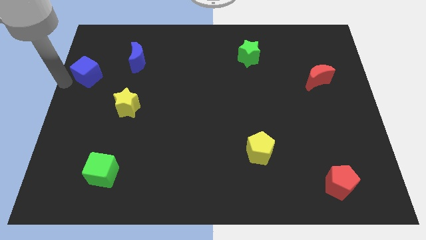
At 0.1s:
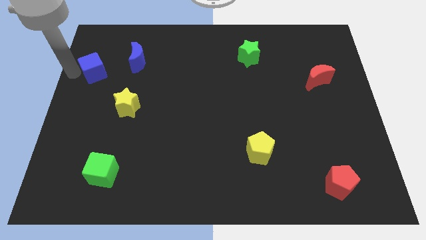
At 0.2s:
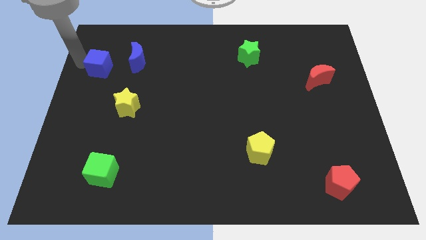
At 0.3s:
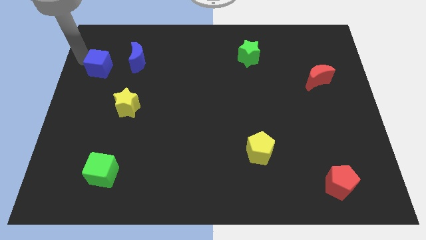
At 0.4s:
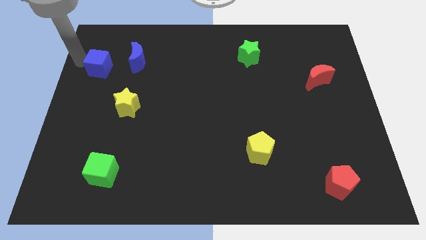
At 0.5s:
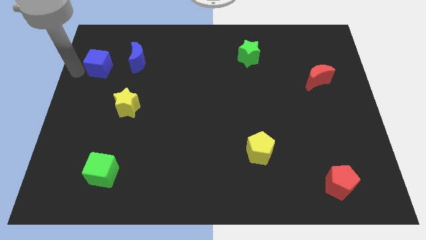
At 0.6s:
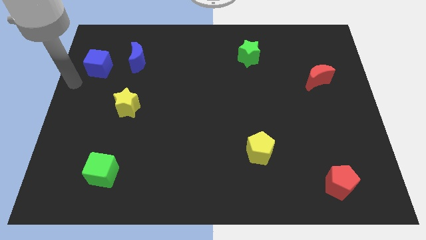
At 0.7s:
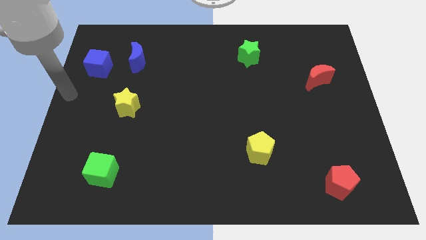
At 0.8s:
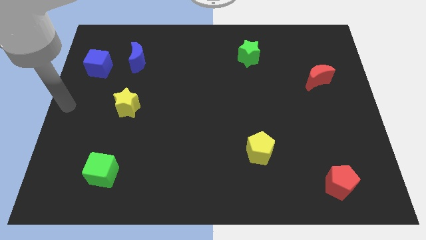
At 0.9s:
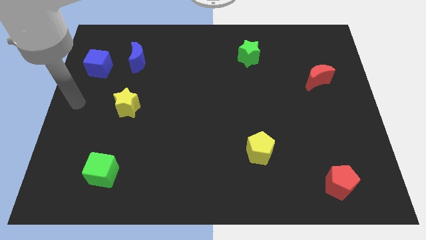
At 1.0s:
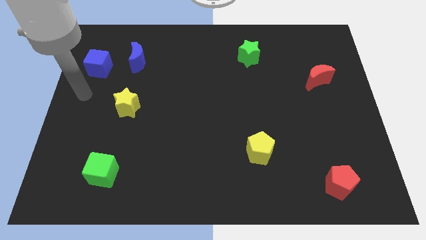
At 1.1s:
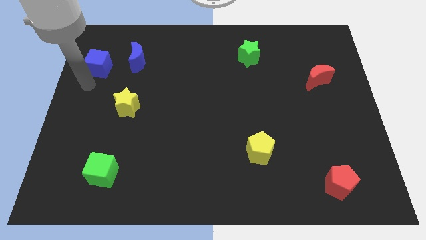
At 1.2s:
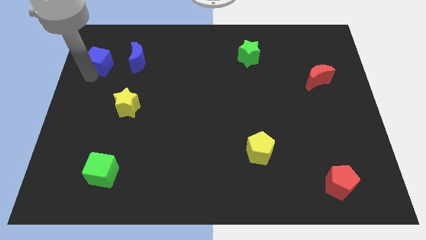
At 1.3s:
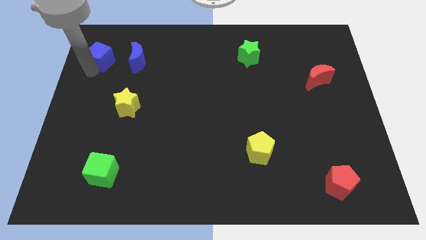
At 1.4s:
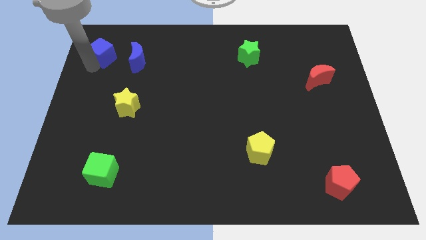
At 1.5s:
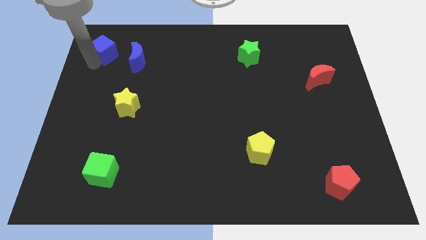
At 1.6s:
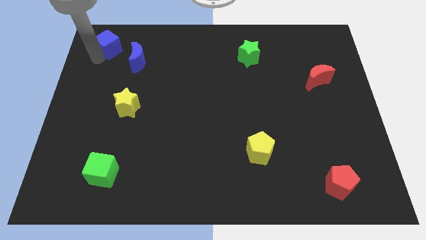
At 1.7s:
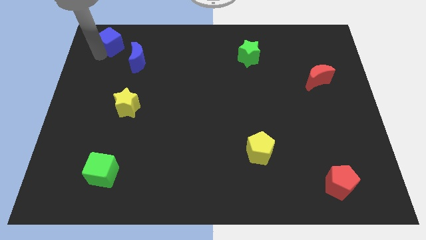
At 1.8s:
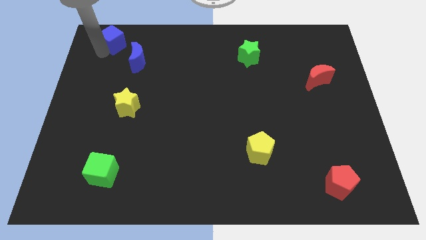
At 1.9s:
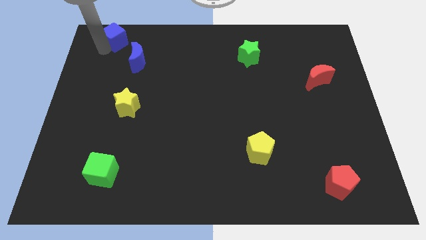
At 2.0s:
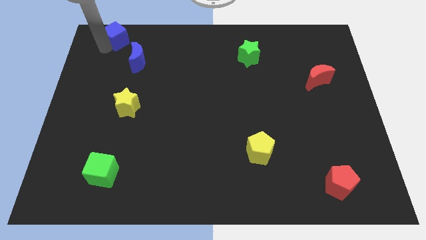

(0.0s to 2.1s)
slide blue cube up slightly

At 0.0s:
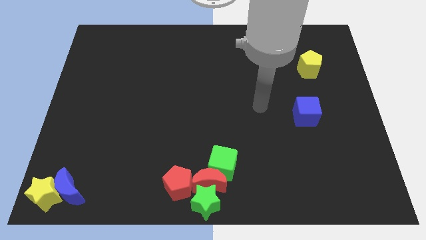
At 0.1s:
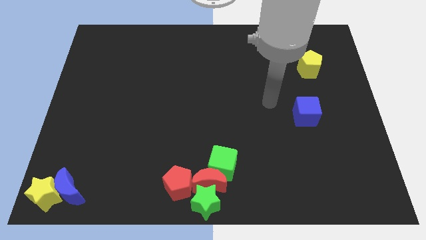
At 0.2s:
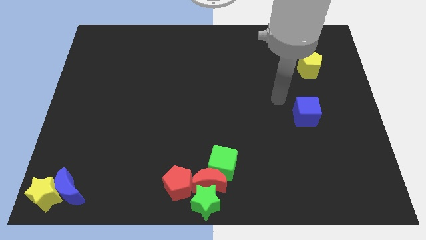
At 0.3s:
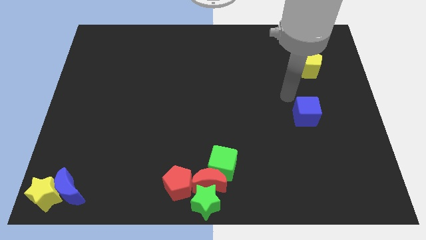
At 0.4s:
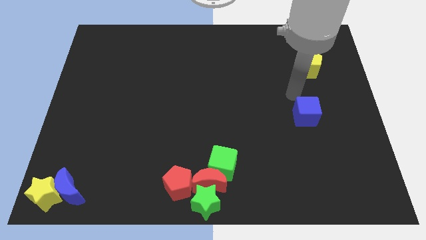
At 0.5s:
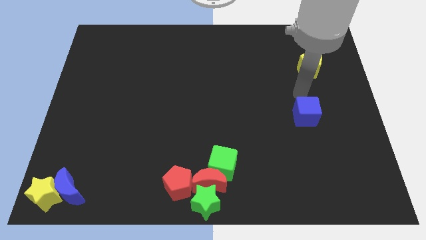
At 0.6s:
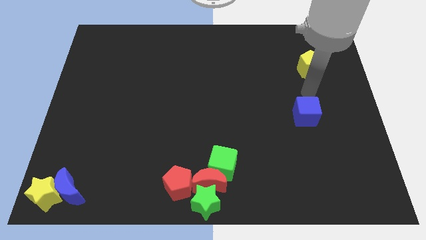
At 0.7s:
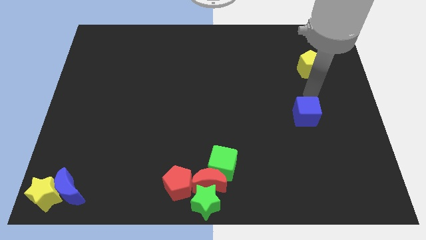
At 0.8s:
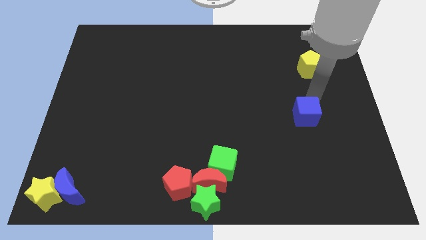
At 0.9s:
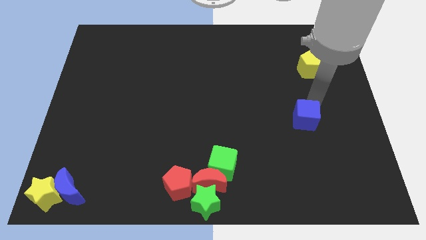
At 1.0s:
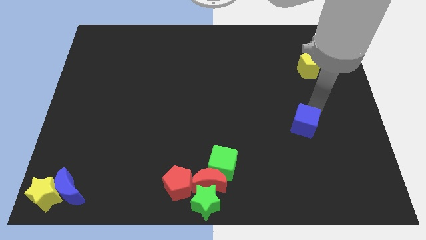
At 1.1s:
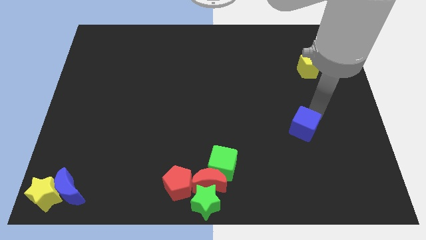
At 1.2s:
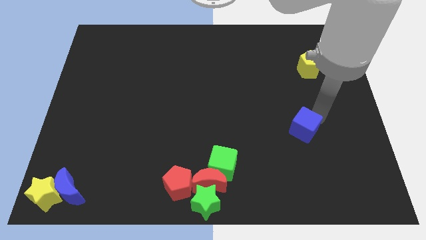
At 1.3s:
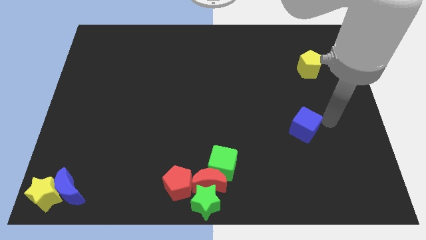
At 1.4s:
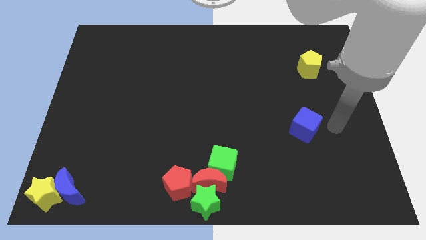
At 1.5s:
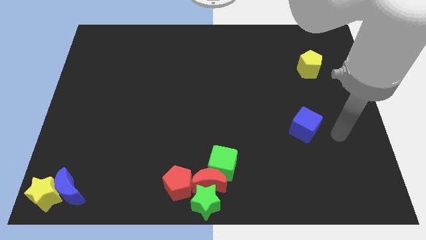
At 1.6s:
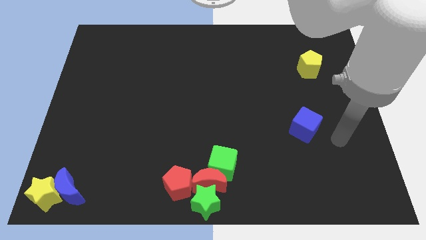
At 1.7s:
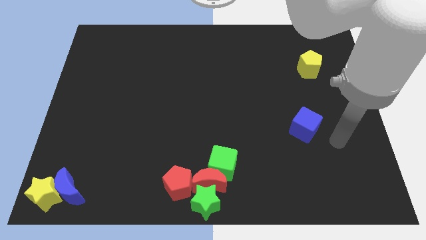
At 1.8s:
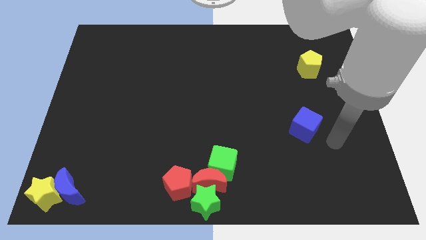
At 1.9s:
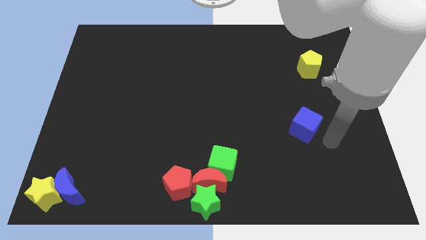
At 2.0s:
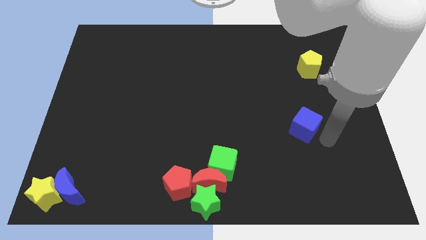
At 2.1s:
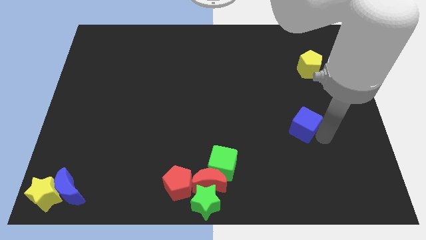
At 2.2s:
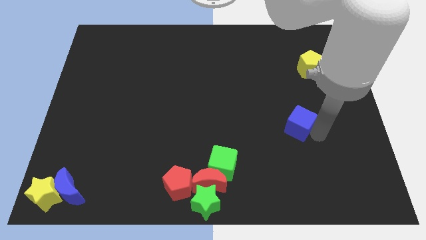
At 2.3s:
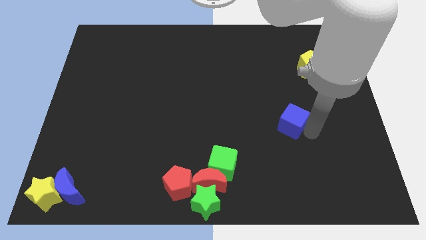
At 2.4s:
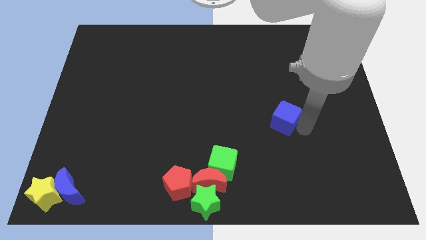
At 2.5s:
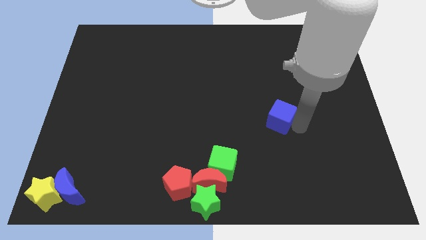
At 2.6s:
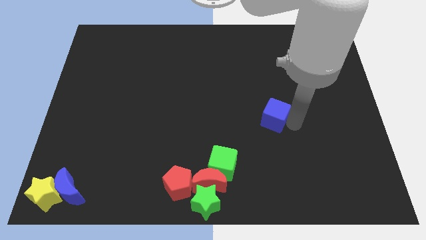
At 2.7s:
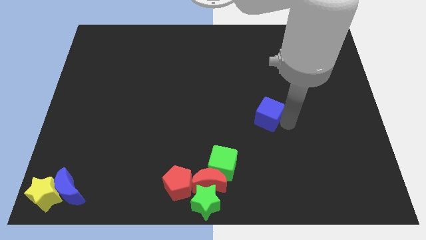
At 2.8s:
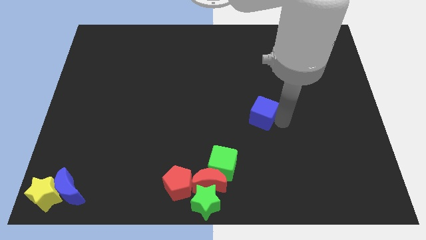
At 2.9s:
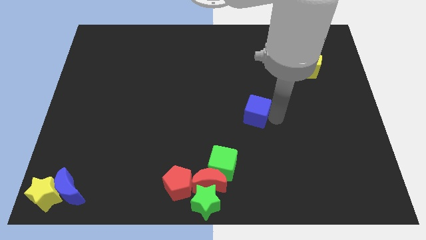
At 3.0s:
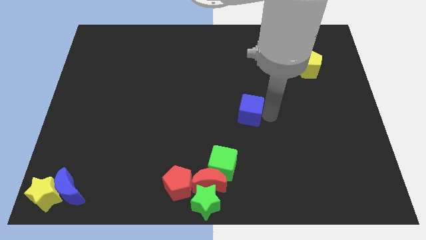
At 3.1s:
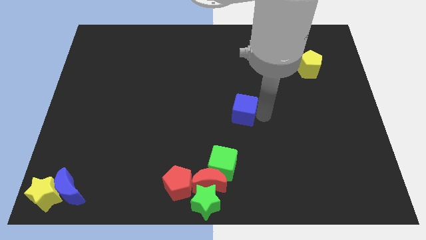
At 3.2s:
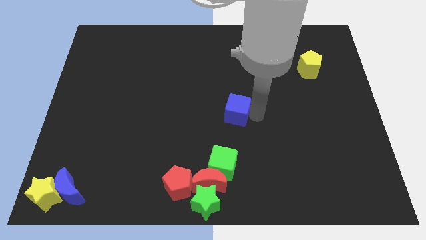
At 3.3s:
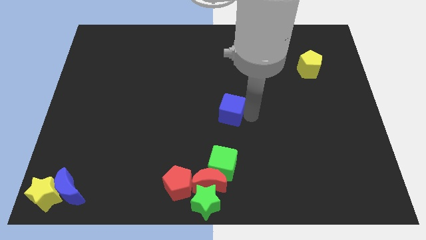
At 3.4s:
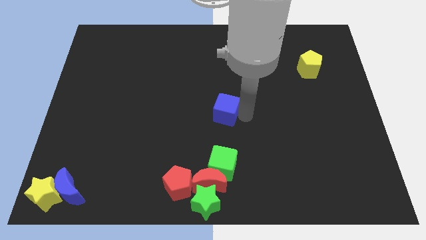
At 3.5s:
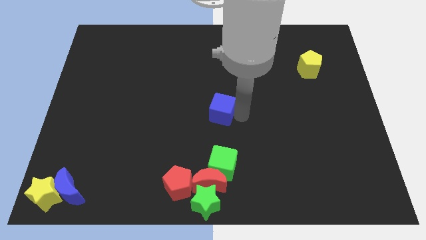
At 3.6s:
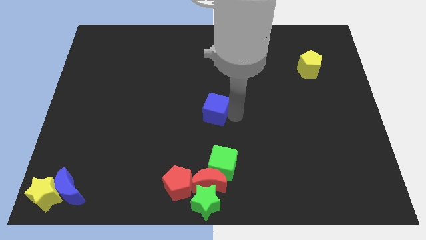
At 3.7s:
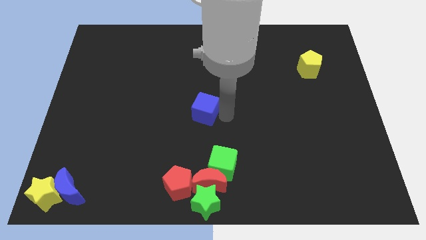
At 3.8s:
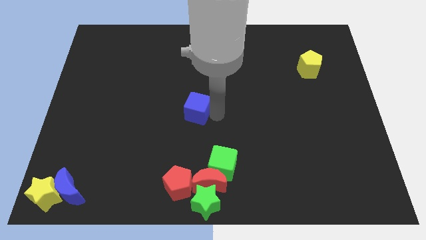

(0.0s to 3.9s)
move the blue cube to the center of the board

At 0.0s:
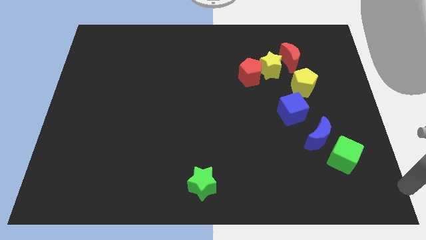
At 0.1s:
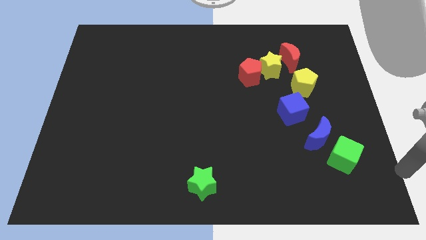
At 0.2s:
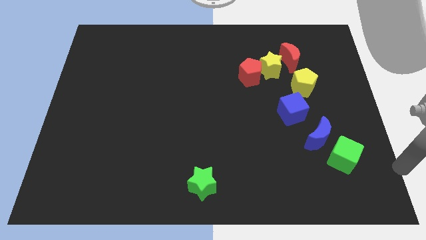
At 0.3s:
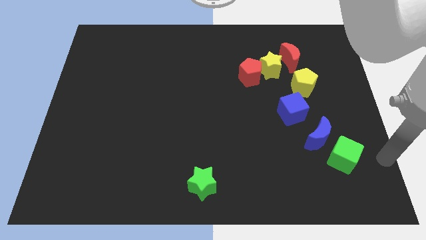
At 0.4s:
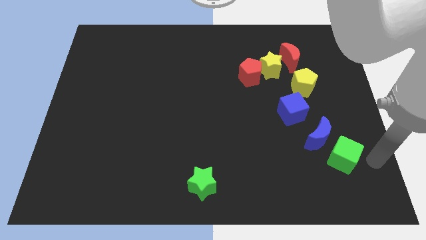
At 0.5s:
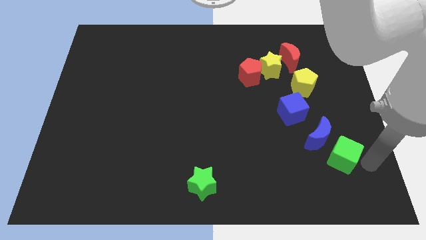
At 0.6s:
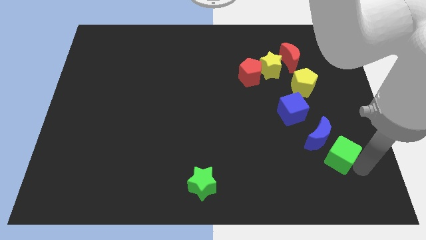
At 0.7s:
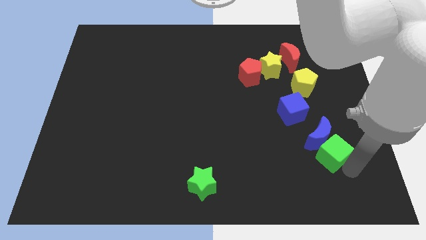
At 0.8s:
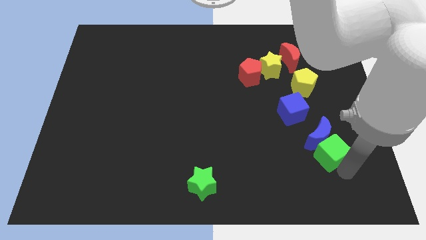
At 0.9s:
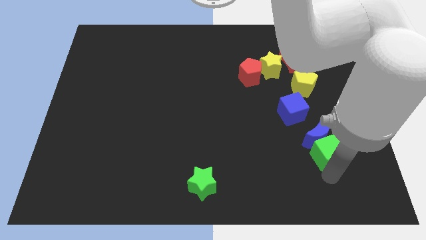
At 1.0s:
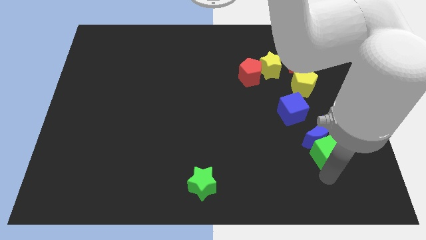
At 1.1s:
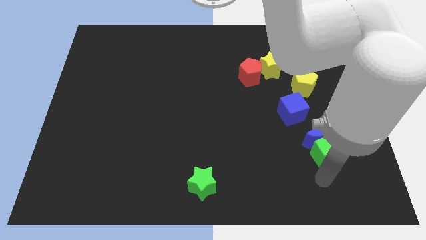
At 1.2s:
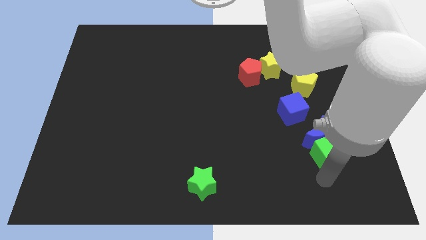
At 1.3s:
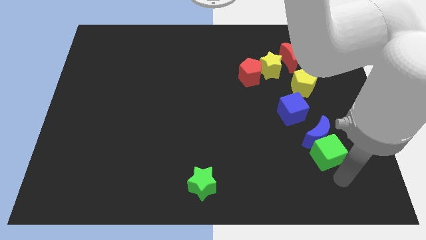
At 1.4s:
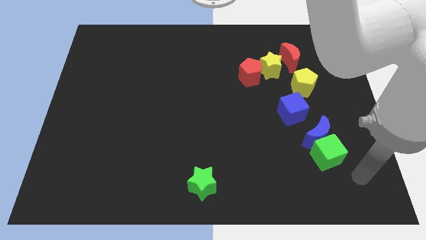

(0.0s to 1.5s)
push the green cube into the blue moon

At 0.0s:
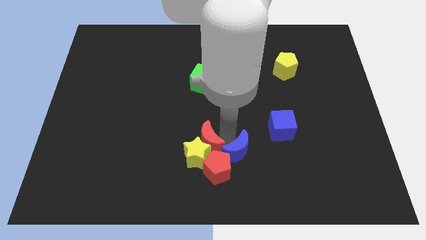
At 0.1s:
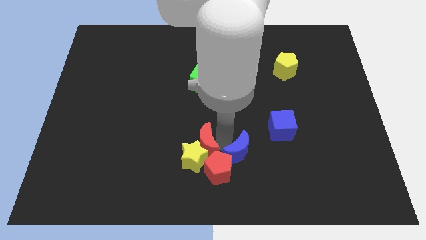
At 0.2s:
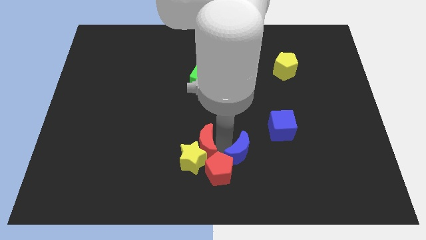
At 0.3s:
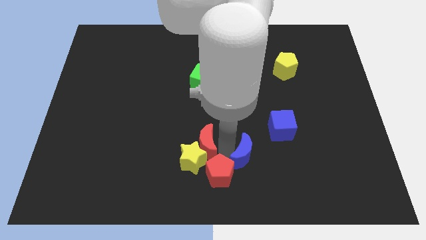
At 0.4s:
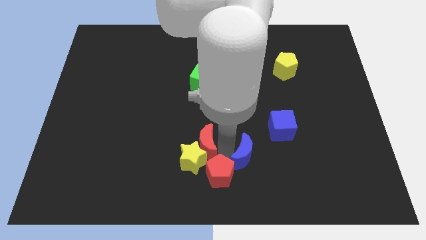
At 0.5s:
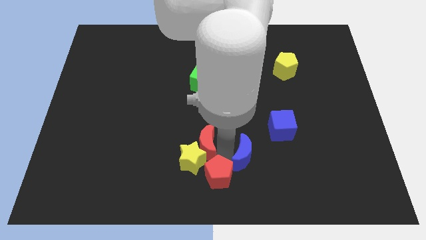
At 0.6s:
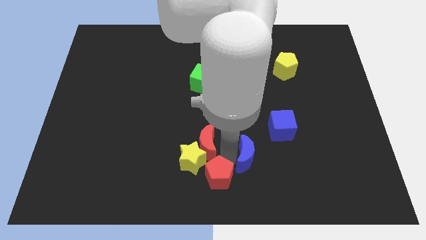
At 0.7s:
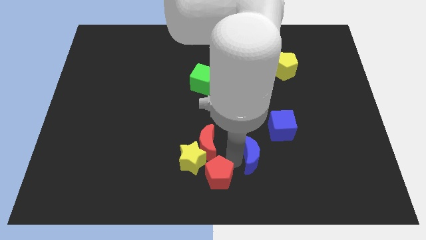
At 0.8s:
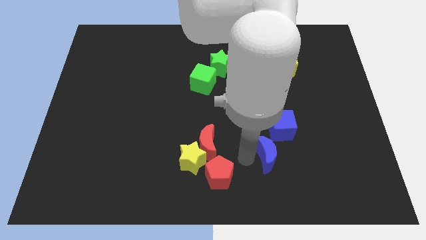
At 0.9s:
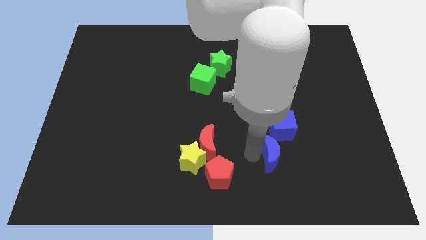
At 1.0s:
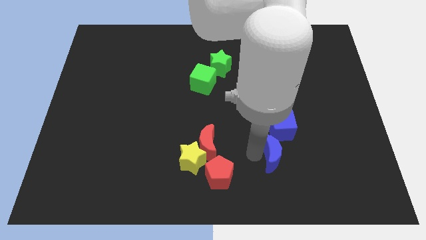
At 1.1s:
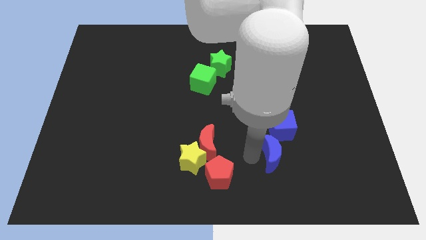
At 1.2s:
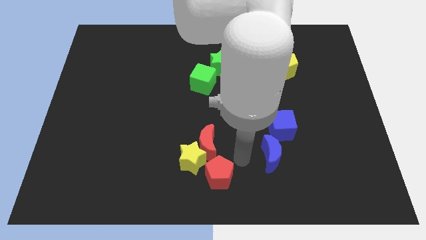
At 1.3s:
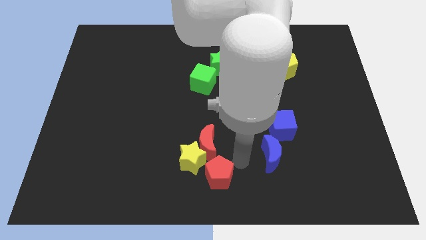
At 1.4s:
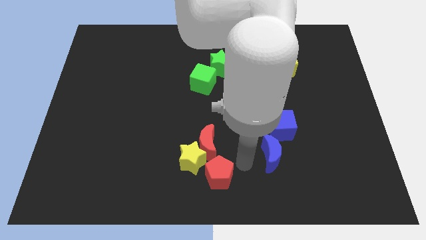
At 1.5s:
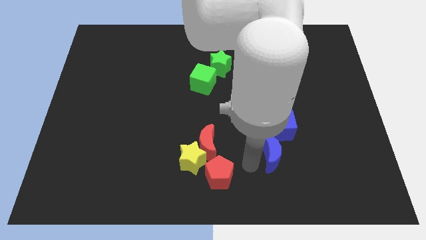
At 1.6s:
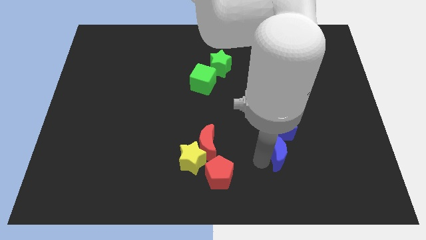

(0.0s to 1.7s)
separate the blue moon from the red blocks
